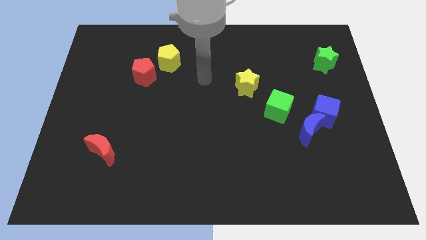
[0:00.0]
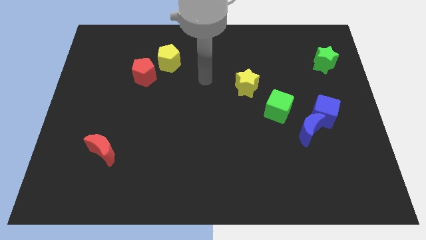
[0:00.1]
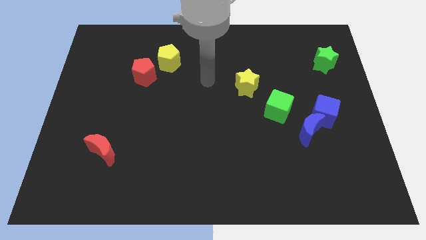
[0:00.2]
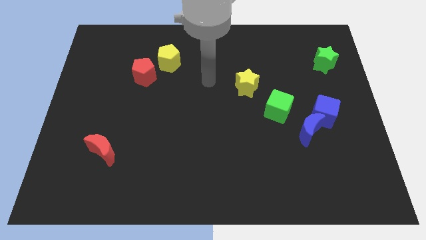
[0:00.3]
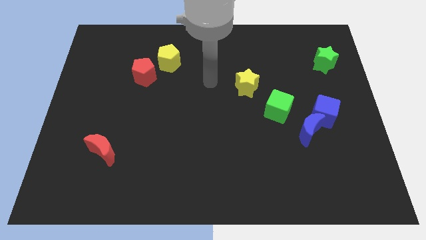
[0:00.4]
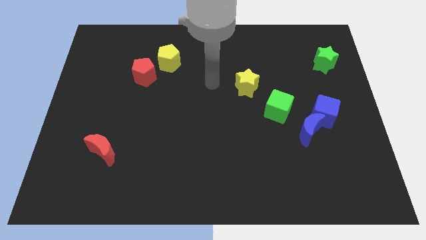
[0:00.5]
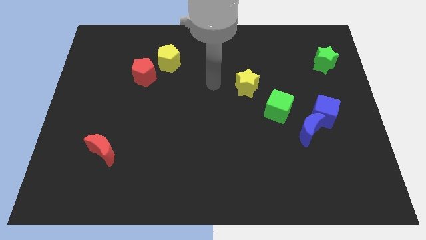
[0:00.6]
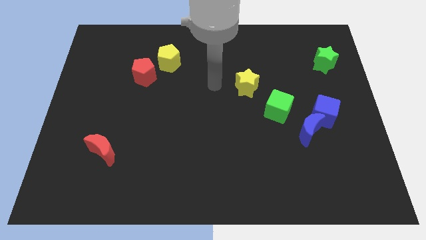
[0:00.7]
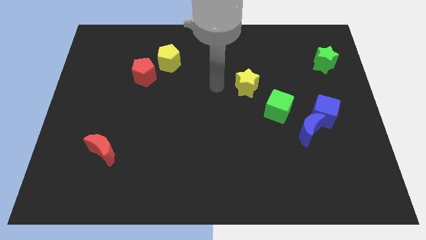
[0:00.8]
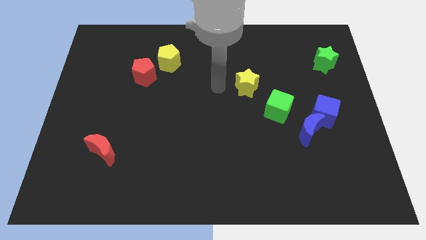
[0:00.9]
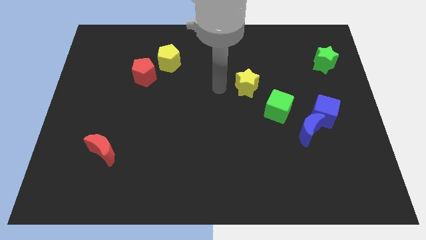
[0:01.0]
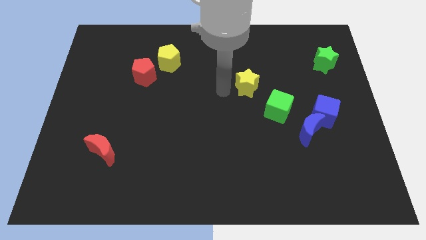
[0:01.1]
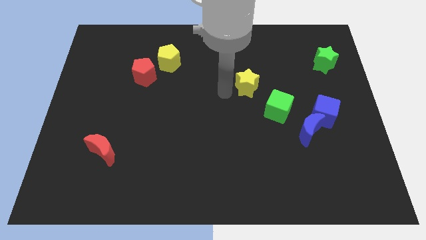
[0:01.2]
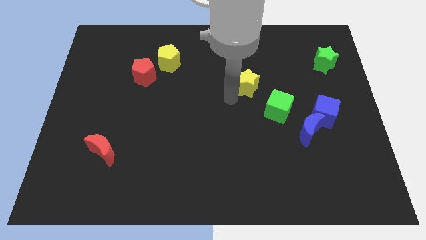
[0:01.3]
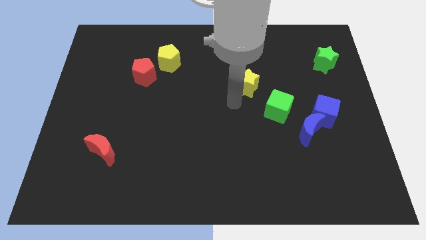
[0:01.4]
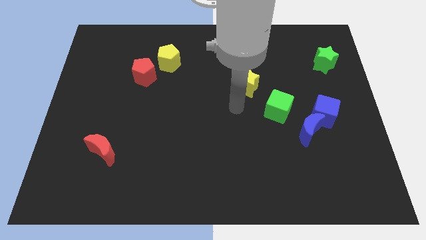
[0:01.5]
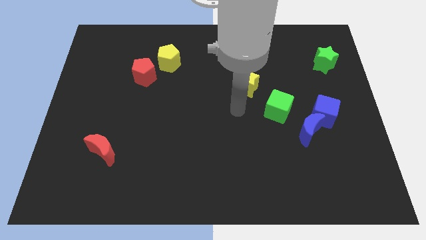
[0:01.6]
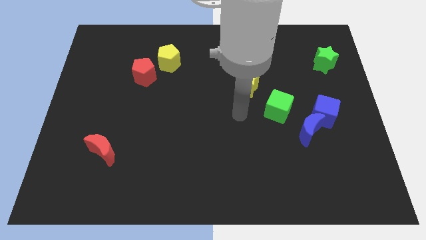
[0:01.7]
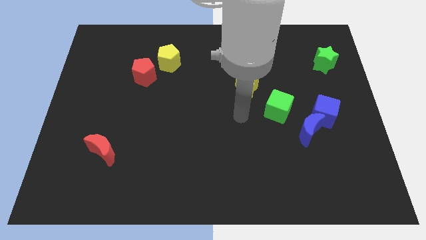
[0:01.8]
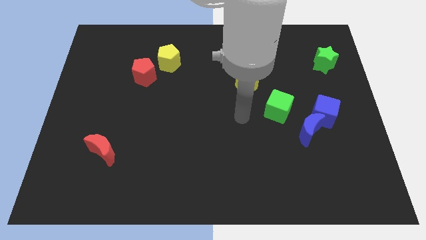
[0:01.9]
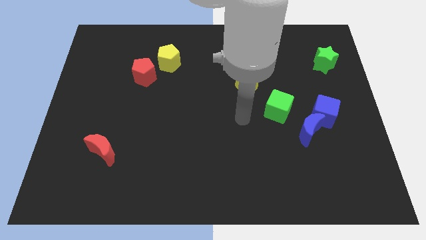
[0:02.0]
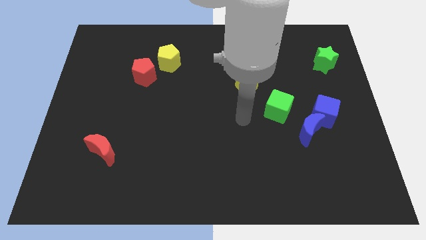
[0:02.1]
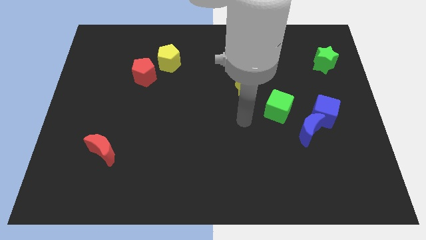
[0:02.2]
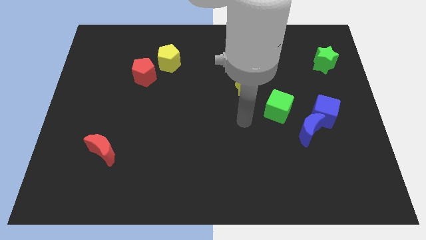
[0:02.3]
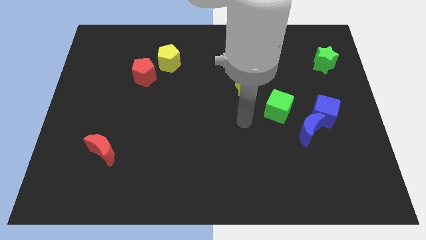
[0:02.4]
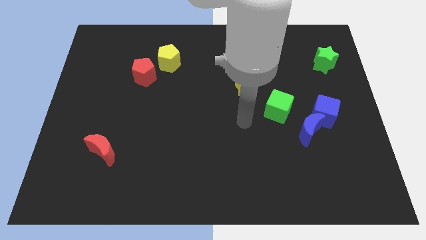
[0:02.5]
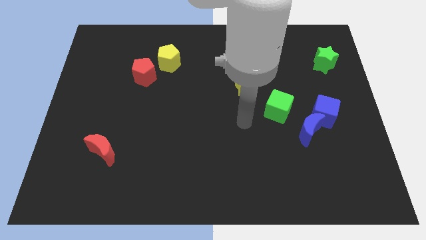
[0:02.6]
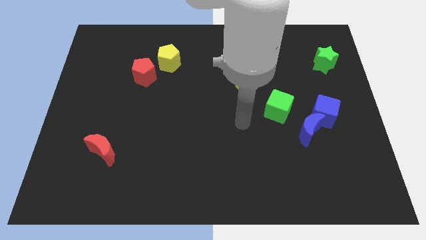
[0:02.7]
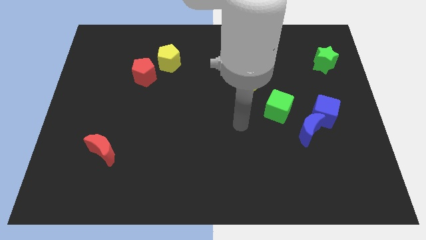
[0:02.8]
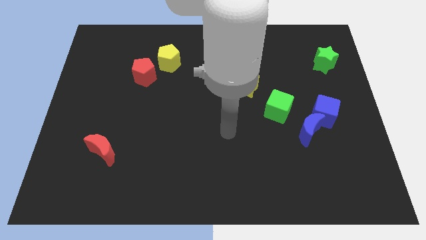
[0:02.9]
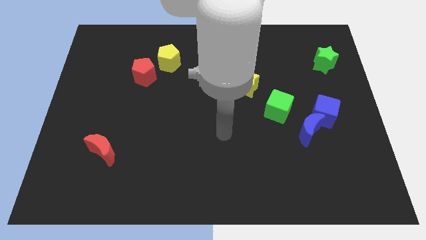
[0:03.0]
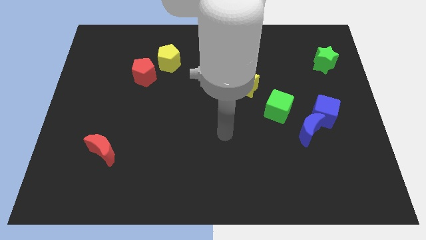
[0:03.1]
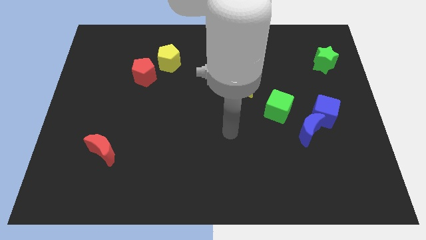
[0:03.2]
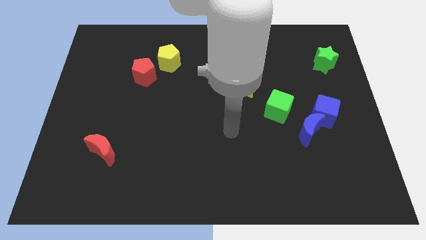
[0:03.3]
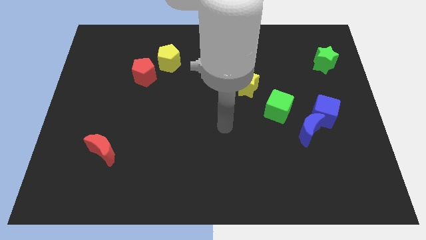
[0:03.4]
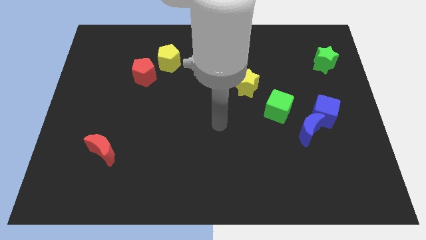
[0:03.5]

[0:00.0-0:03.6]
go to the center of the board

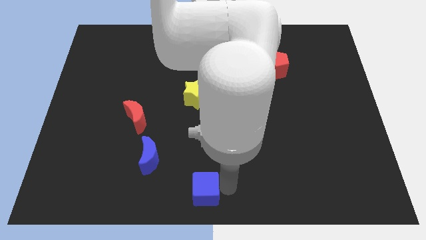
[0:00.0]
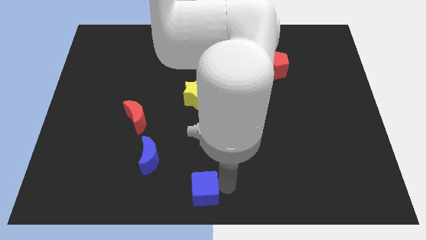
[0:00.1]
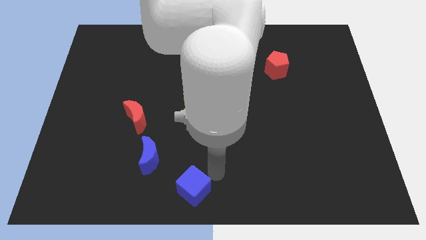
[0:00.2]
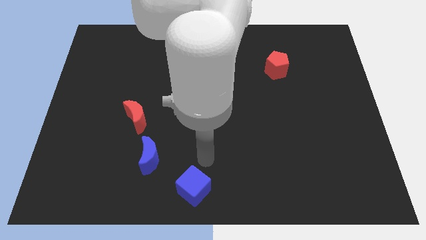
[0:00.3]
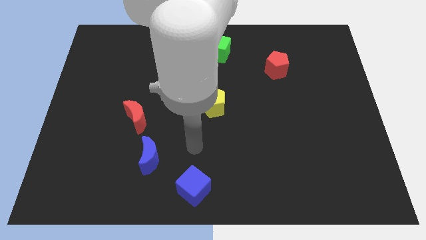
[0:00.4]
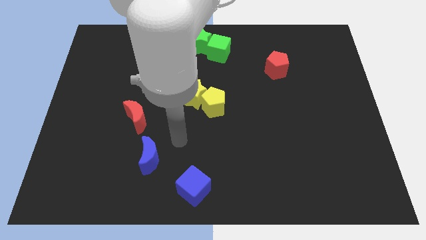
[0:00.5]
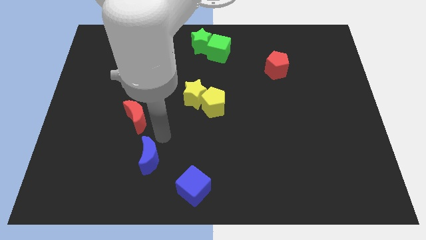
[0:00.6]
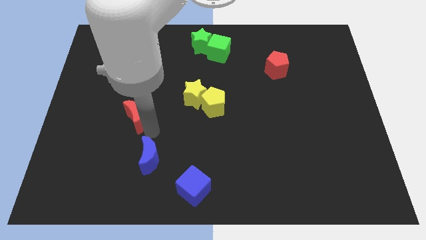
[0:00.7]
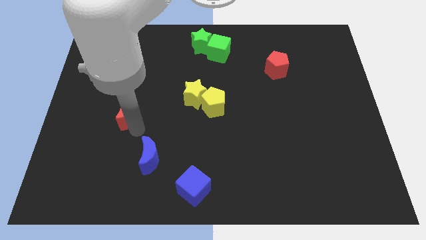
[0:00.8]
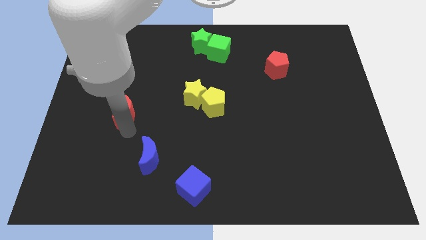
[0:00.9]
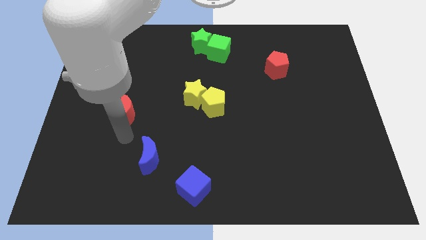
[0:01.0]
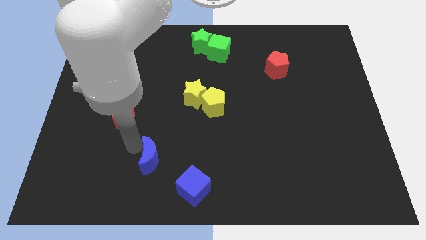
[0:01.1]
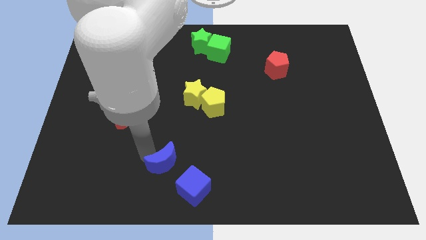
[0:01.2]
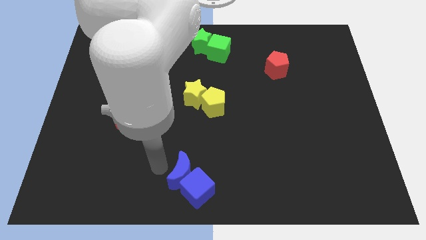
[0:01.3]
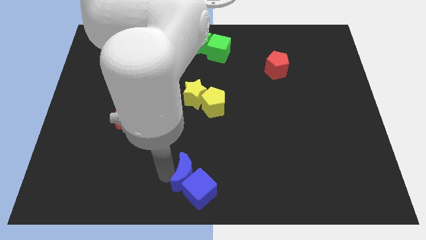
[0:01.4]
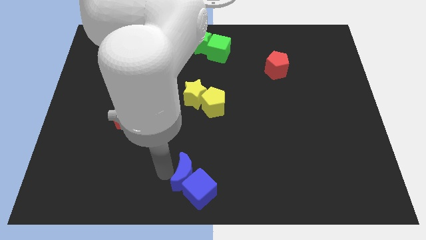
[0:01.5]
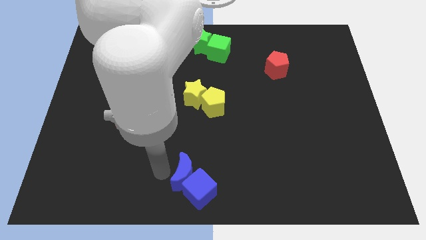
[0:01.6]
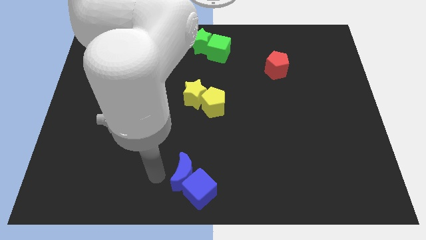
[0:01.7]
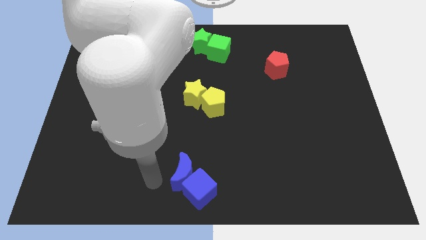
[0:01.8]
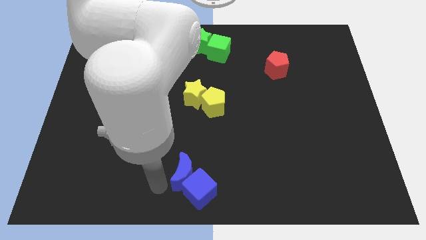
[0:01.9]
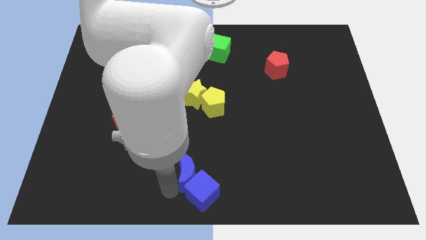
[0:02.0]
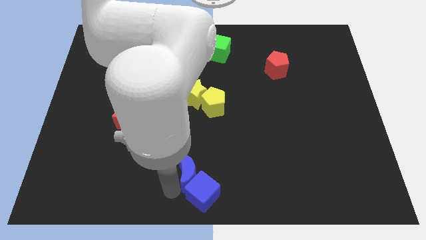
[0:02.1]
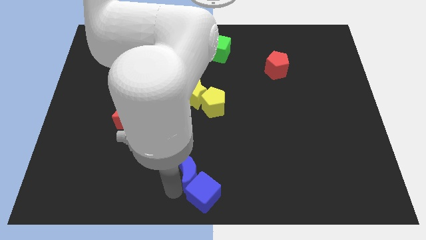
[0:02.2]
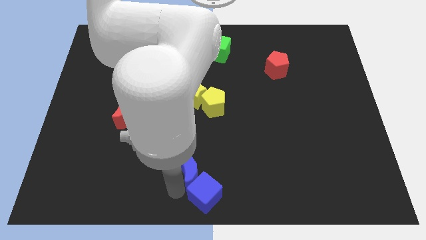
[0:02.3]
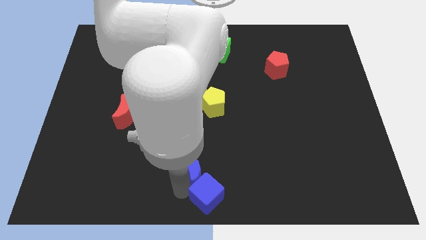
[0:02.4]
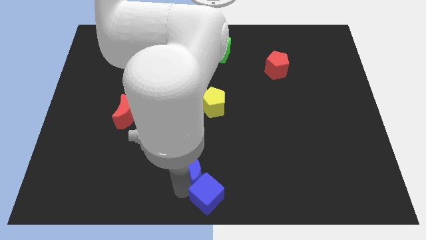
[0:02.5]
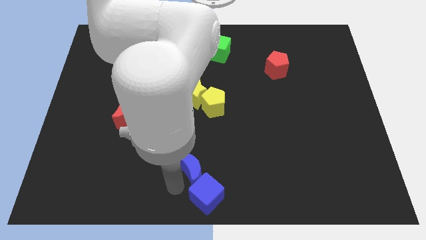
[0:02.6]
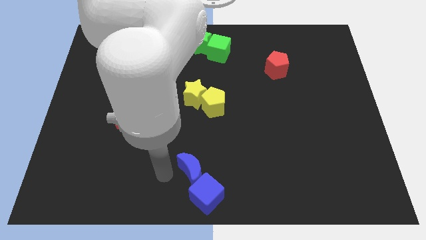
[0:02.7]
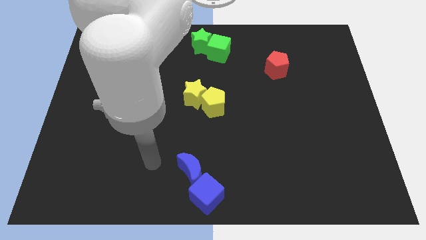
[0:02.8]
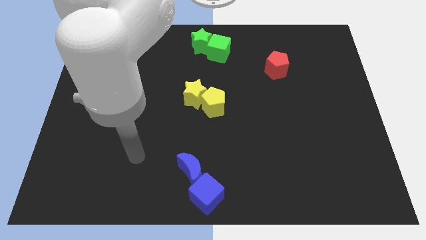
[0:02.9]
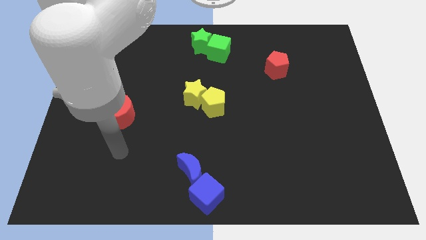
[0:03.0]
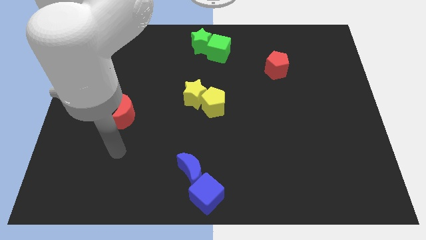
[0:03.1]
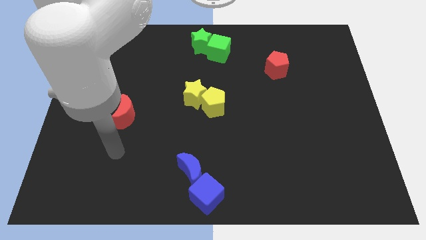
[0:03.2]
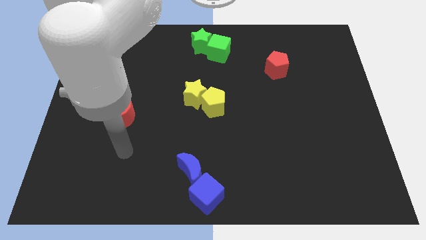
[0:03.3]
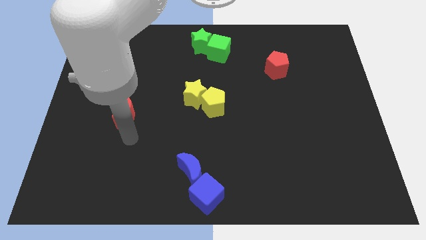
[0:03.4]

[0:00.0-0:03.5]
push the blue crescent to the top left of the blue cube

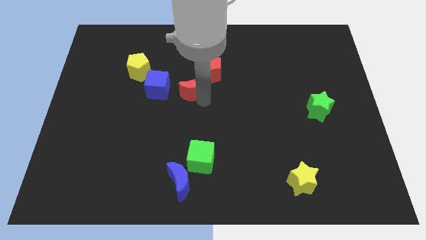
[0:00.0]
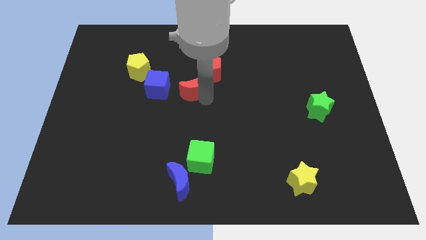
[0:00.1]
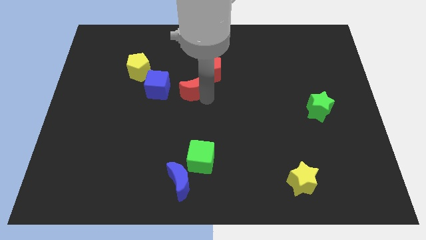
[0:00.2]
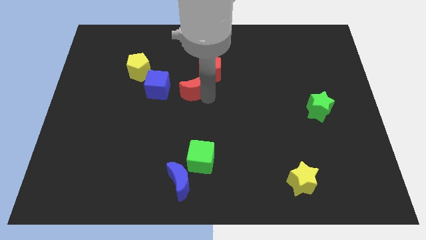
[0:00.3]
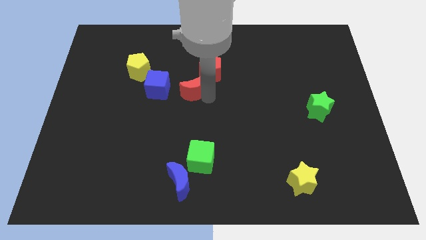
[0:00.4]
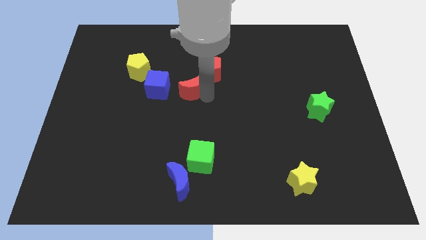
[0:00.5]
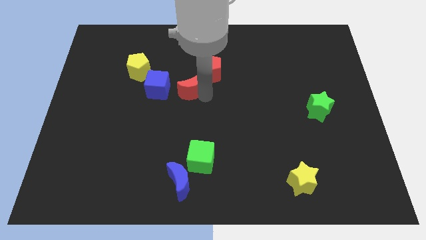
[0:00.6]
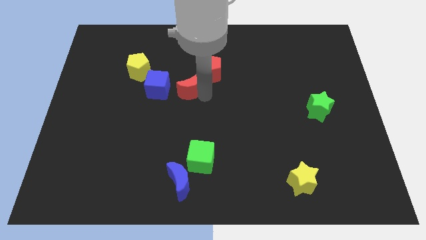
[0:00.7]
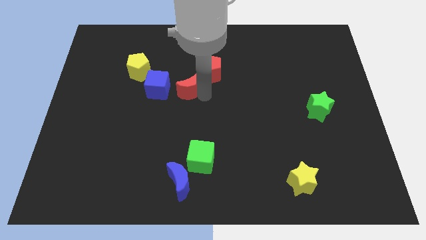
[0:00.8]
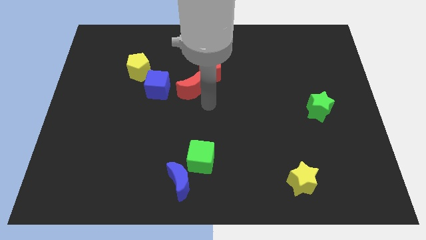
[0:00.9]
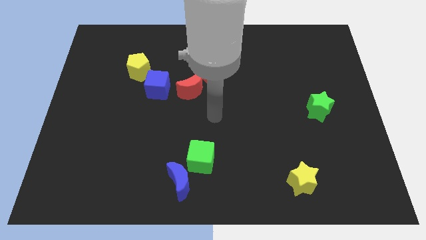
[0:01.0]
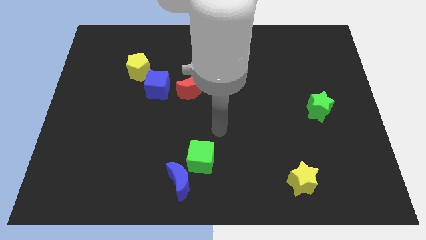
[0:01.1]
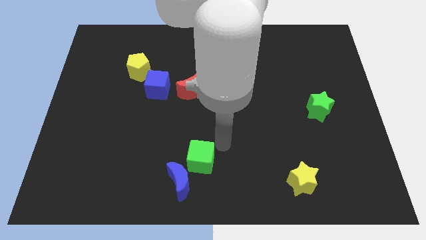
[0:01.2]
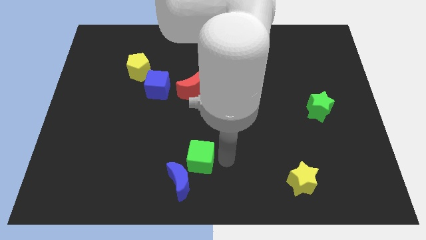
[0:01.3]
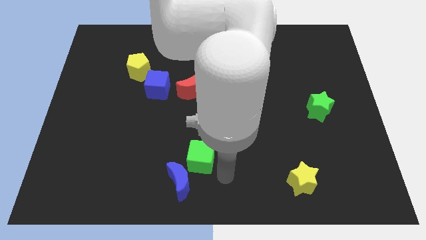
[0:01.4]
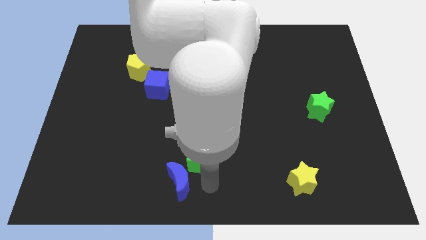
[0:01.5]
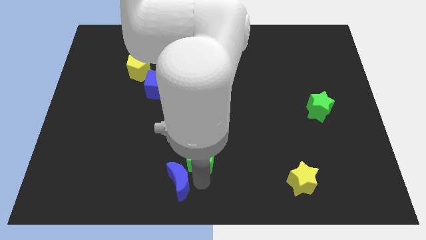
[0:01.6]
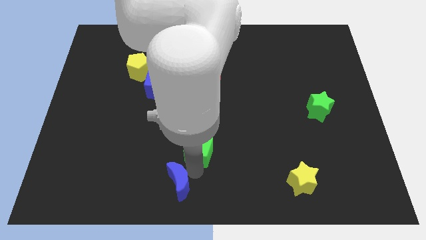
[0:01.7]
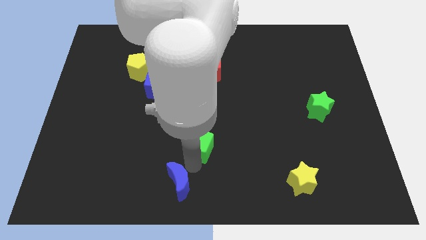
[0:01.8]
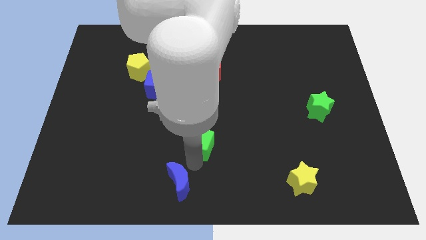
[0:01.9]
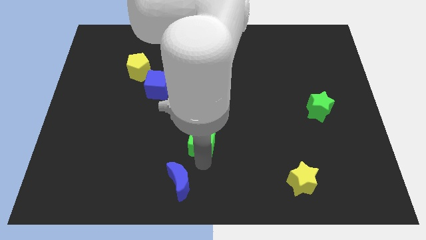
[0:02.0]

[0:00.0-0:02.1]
move the arm behind the green cube
